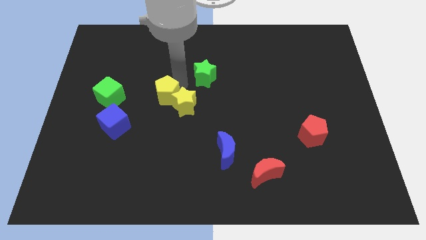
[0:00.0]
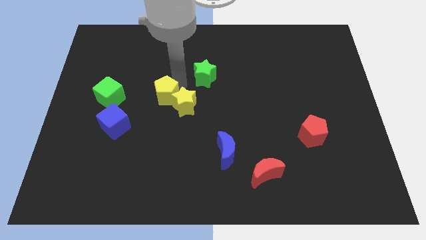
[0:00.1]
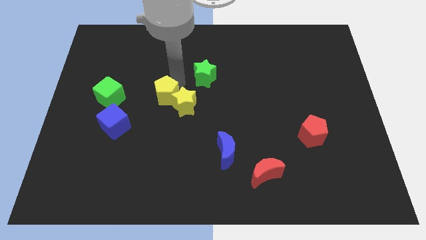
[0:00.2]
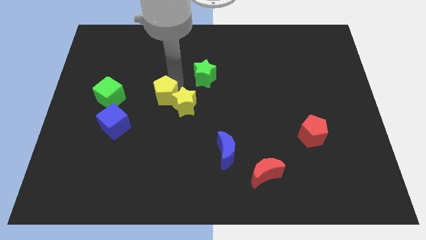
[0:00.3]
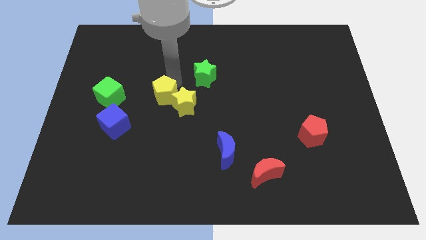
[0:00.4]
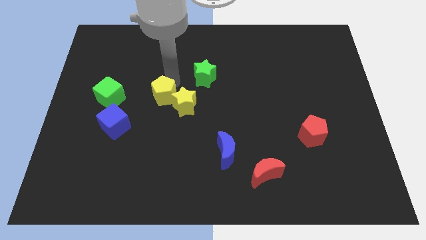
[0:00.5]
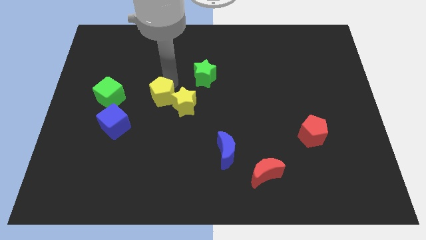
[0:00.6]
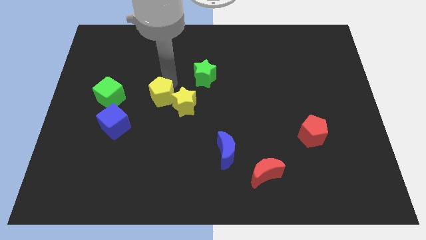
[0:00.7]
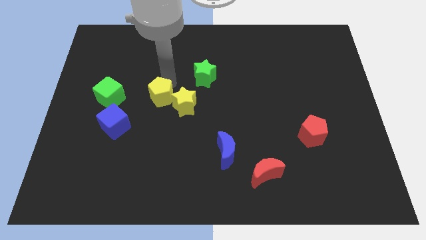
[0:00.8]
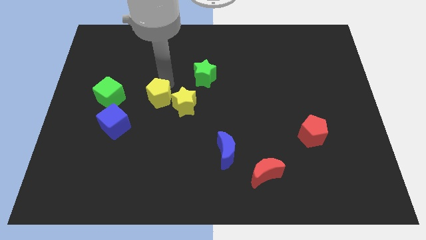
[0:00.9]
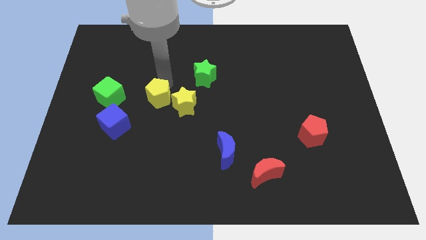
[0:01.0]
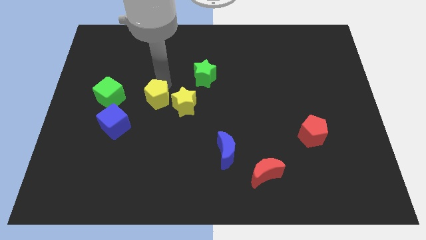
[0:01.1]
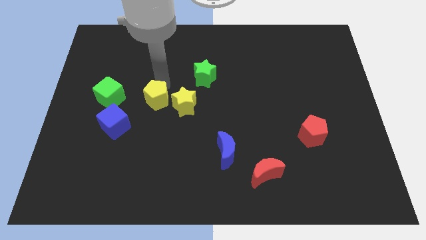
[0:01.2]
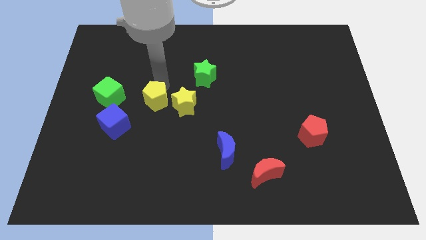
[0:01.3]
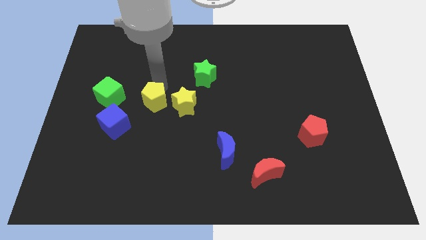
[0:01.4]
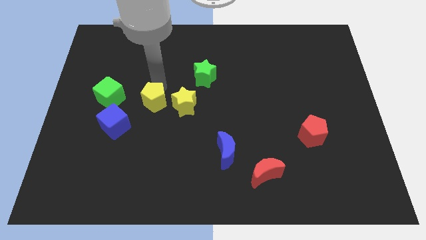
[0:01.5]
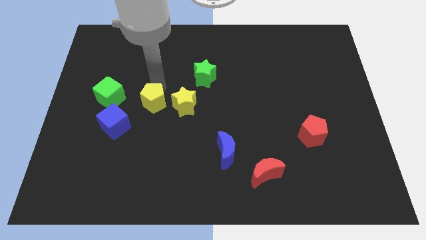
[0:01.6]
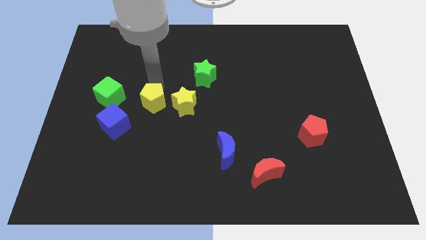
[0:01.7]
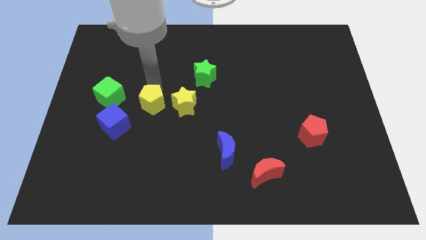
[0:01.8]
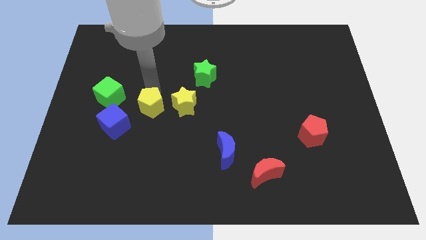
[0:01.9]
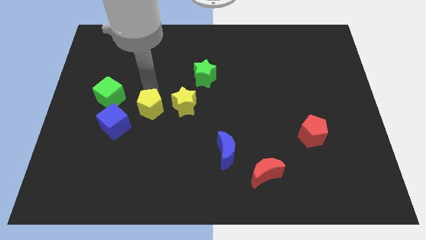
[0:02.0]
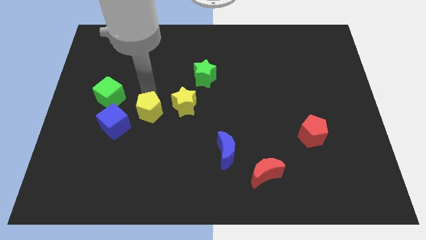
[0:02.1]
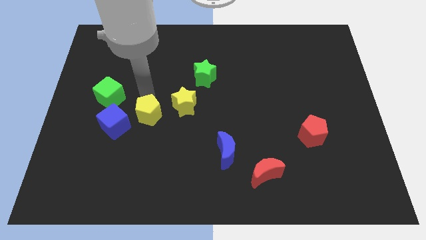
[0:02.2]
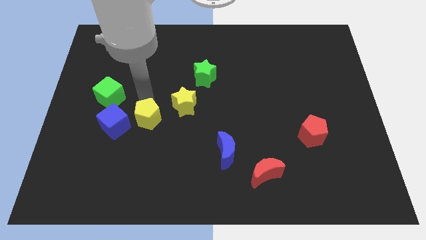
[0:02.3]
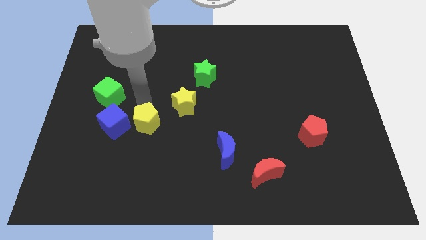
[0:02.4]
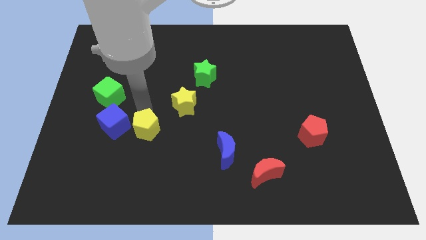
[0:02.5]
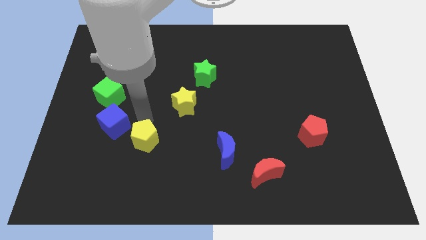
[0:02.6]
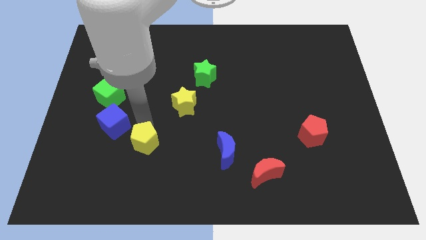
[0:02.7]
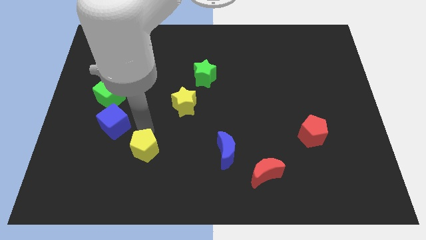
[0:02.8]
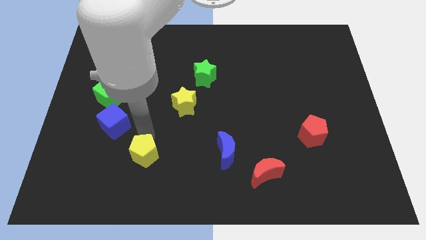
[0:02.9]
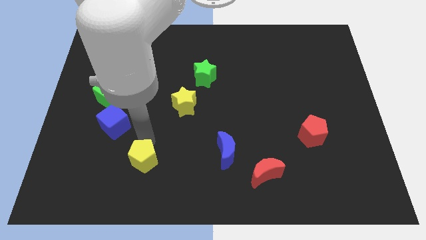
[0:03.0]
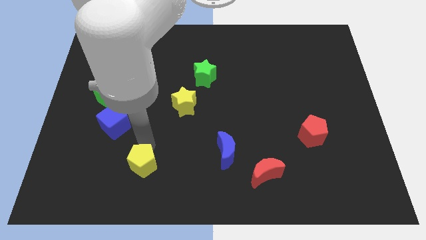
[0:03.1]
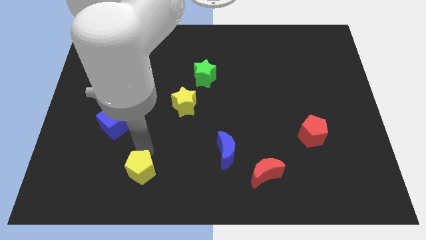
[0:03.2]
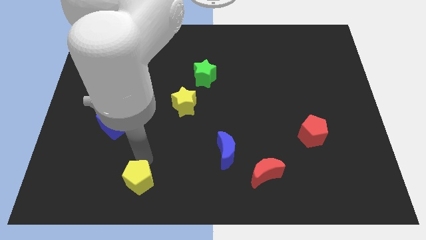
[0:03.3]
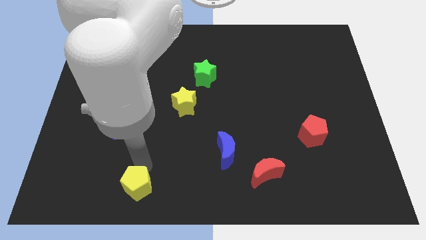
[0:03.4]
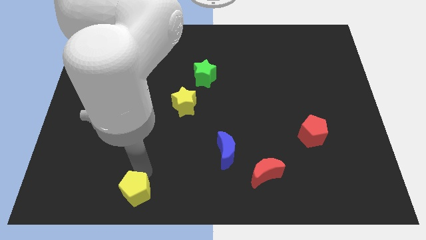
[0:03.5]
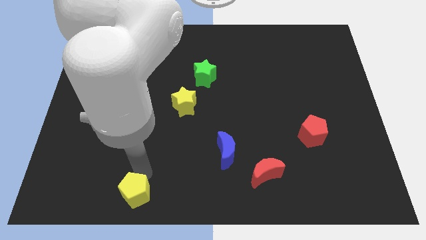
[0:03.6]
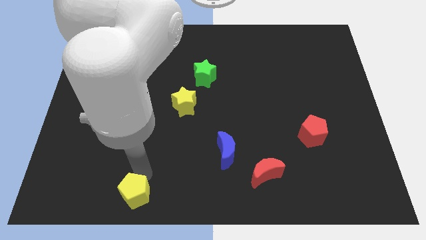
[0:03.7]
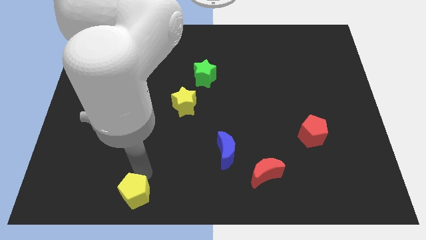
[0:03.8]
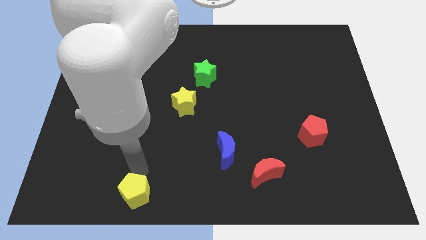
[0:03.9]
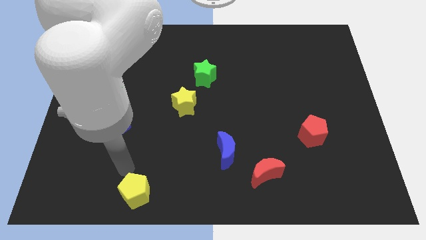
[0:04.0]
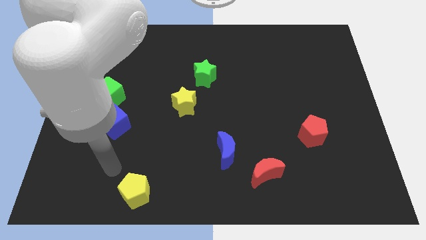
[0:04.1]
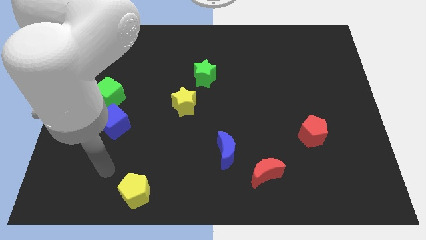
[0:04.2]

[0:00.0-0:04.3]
move the yellow pentagon towards the bottom of the board

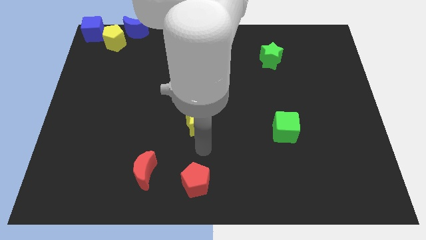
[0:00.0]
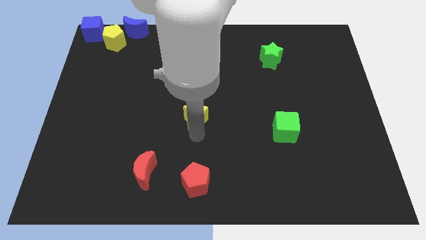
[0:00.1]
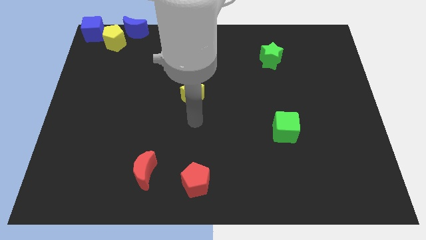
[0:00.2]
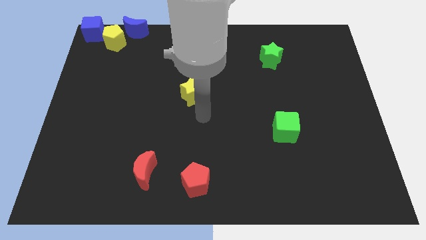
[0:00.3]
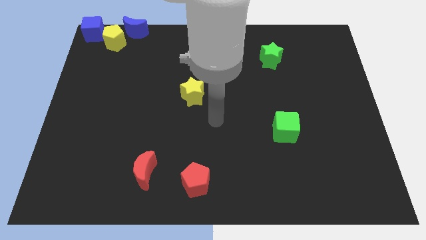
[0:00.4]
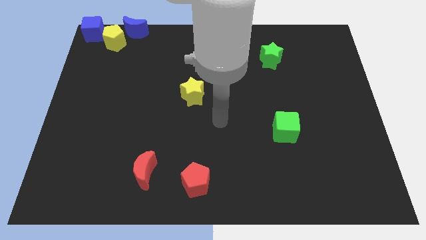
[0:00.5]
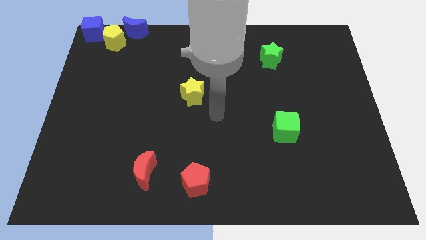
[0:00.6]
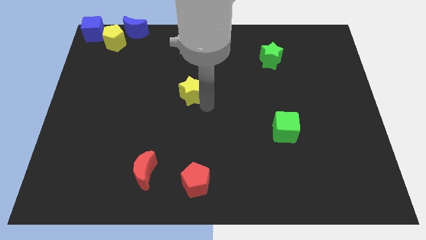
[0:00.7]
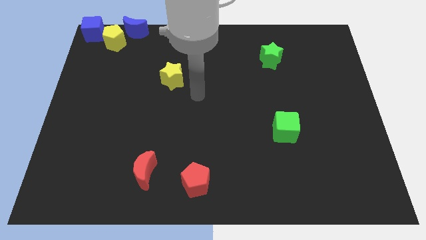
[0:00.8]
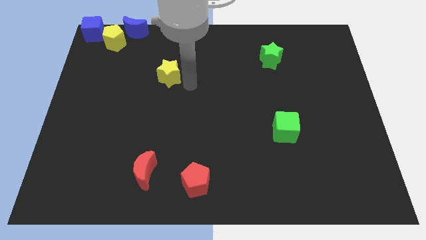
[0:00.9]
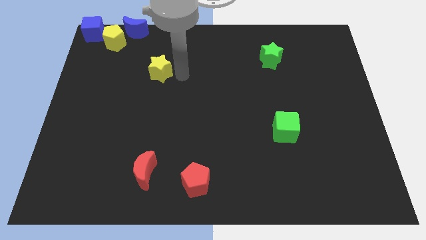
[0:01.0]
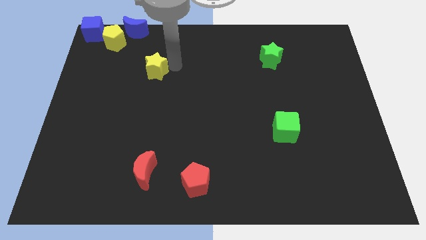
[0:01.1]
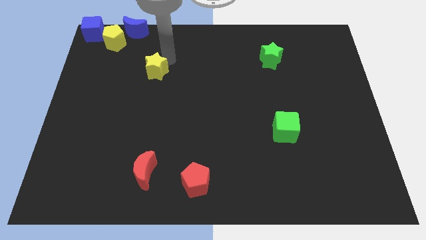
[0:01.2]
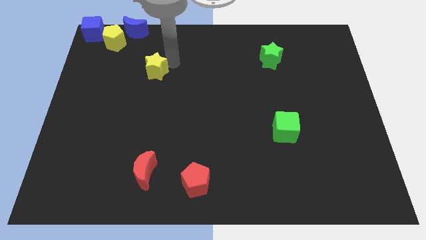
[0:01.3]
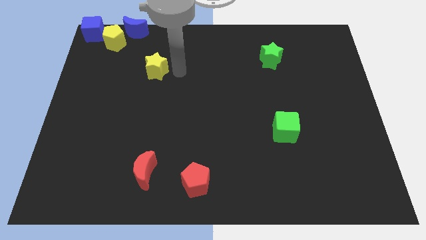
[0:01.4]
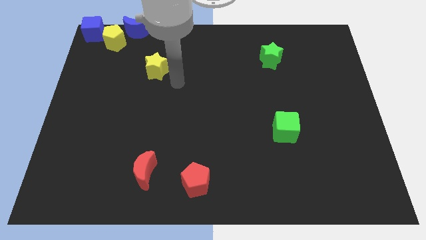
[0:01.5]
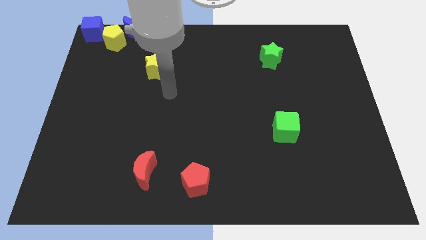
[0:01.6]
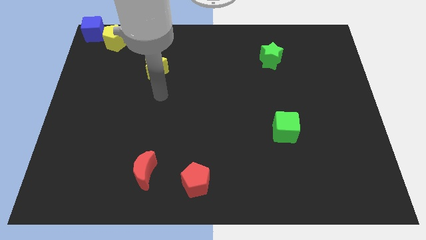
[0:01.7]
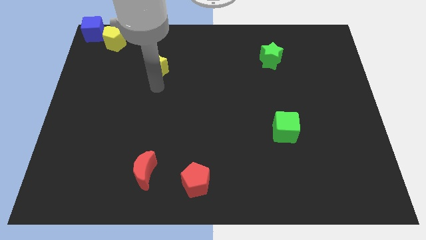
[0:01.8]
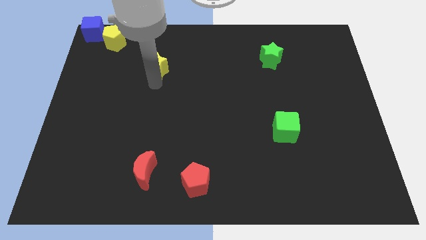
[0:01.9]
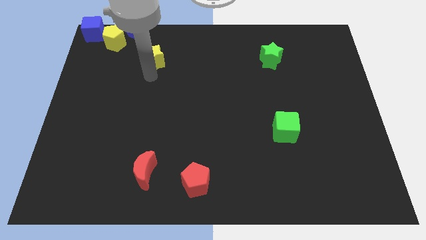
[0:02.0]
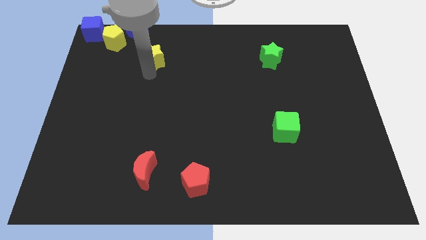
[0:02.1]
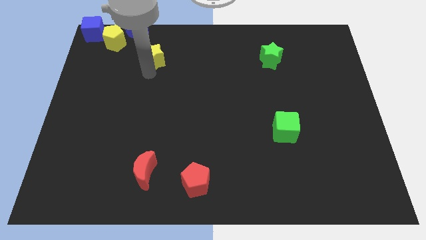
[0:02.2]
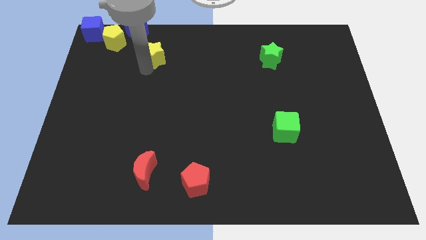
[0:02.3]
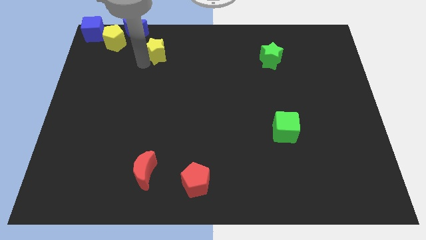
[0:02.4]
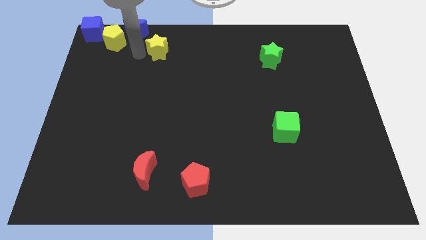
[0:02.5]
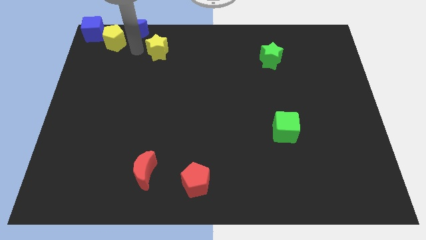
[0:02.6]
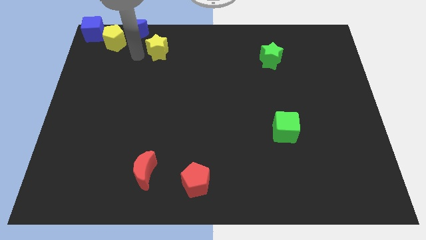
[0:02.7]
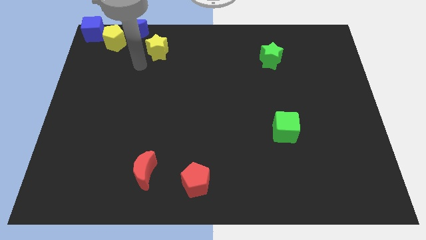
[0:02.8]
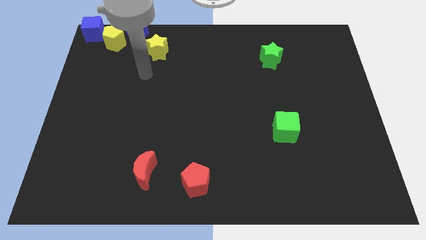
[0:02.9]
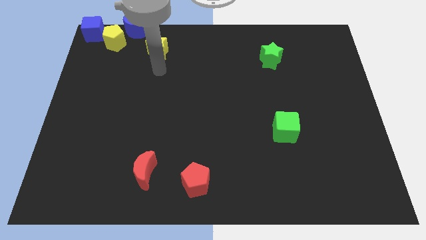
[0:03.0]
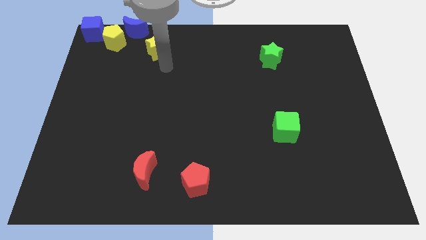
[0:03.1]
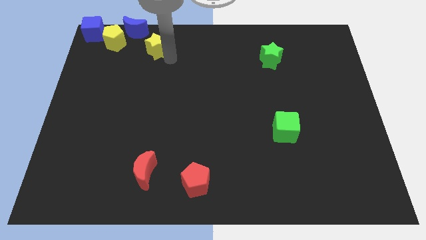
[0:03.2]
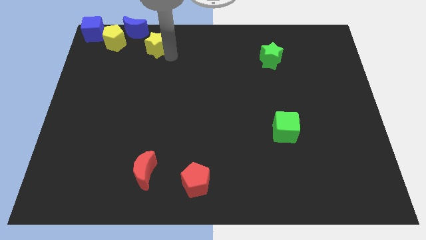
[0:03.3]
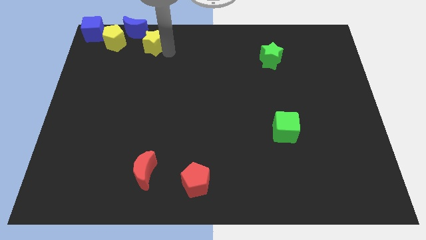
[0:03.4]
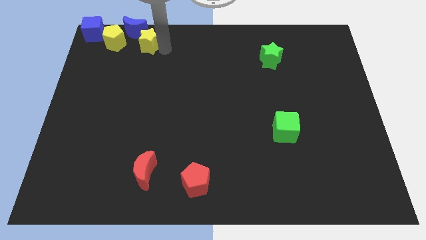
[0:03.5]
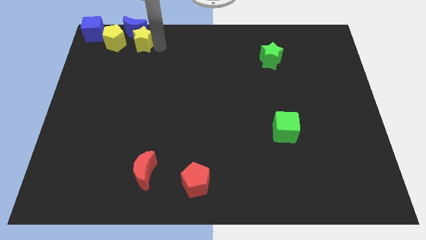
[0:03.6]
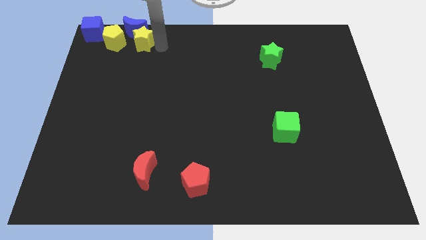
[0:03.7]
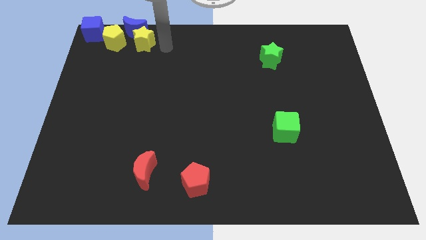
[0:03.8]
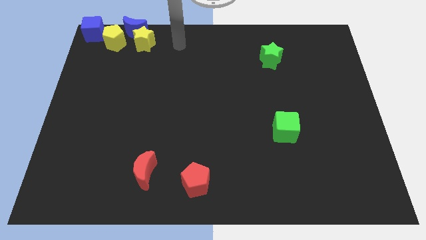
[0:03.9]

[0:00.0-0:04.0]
move the yellow star into the blue crescent

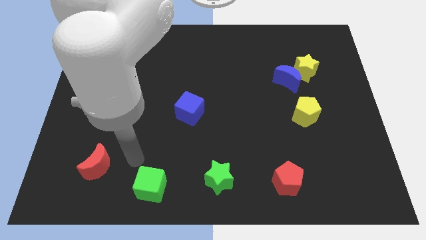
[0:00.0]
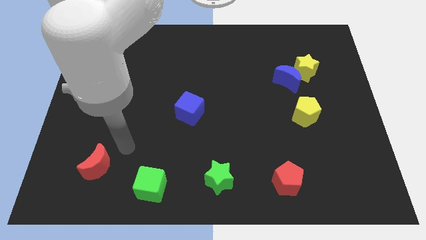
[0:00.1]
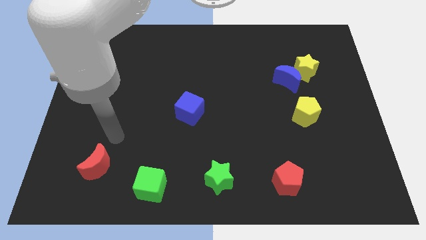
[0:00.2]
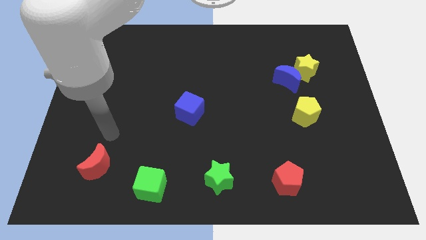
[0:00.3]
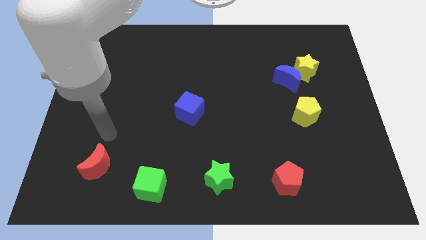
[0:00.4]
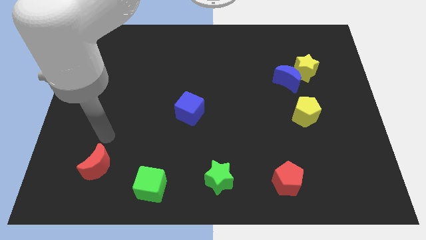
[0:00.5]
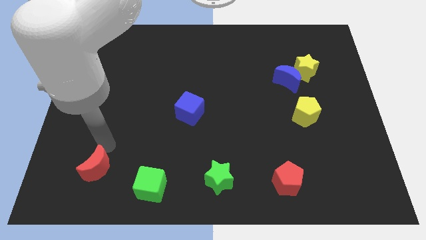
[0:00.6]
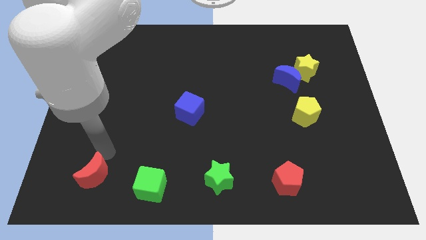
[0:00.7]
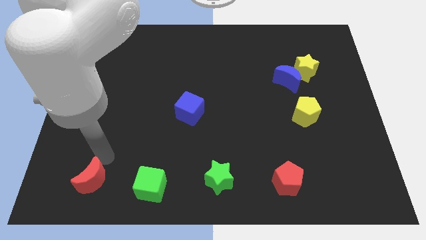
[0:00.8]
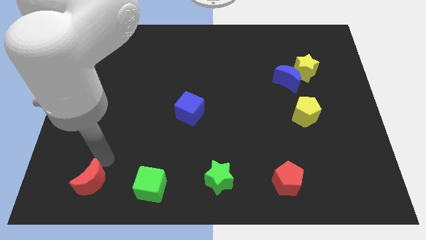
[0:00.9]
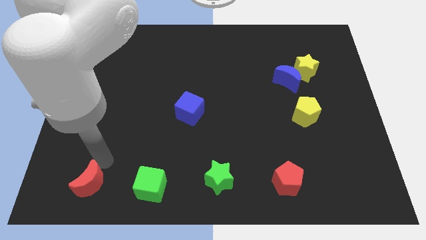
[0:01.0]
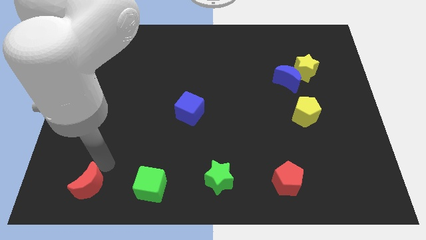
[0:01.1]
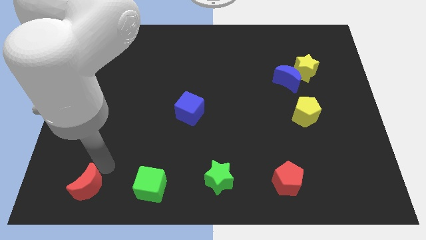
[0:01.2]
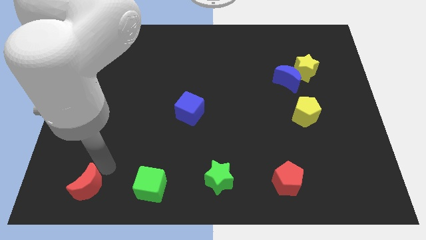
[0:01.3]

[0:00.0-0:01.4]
move the red moon slightly down
